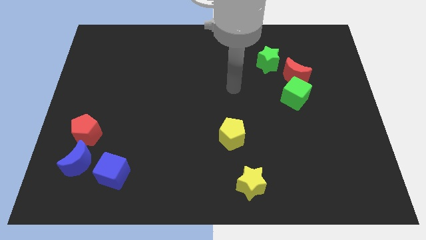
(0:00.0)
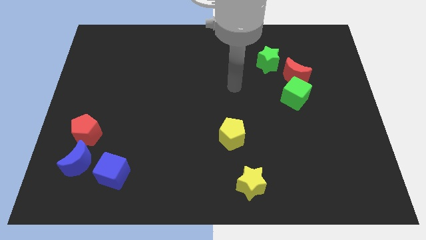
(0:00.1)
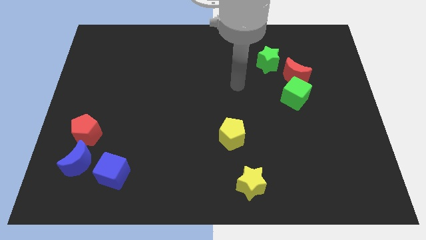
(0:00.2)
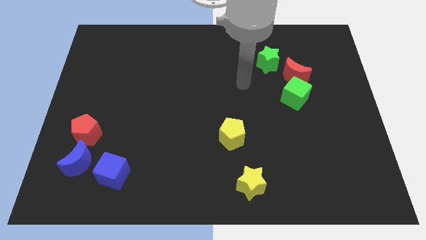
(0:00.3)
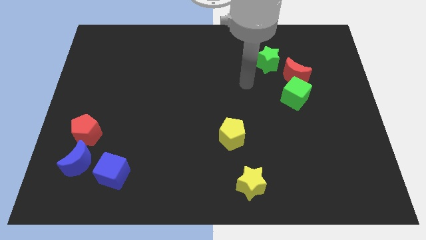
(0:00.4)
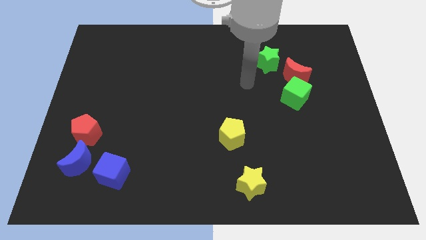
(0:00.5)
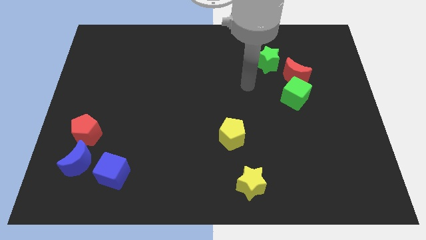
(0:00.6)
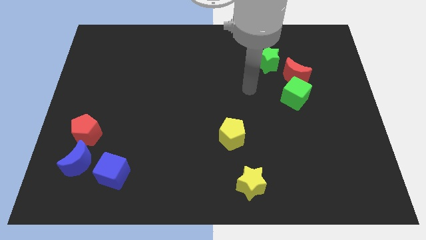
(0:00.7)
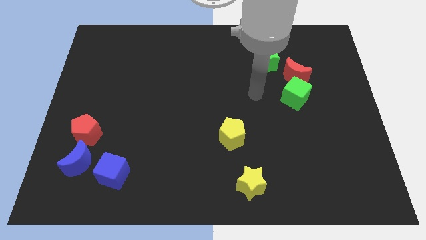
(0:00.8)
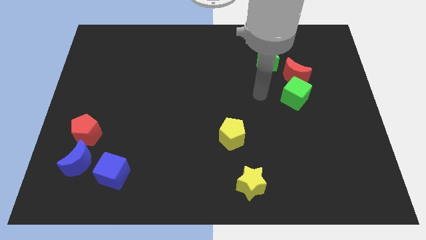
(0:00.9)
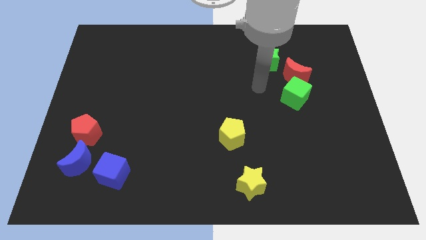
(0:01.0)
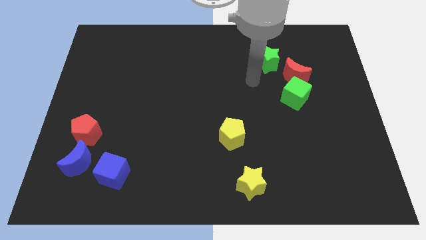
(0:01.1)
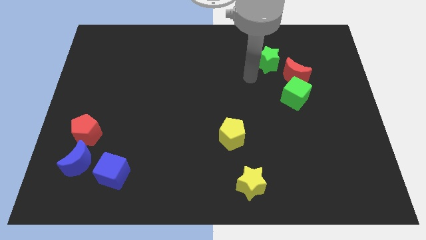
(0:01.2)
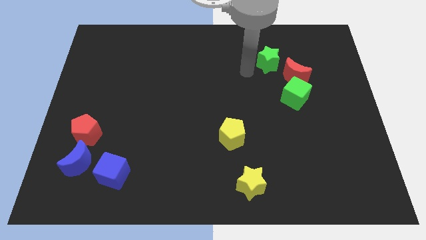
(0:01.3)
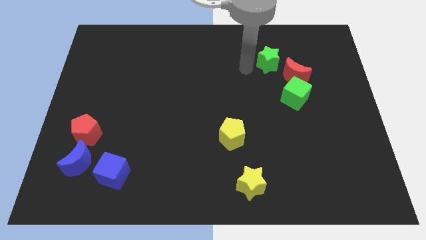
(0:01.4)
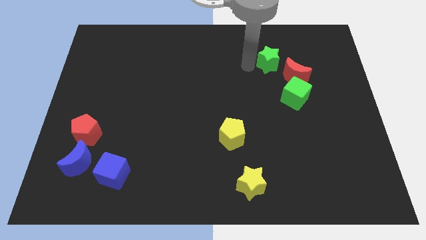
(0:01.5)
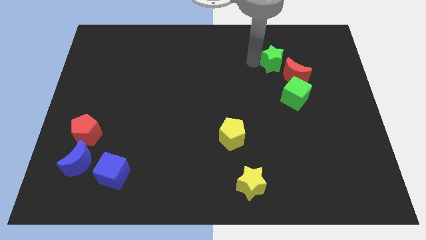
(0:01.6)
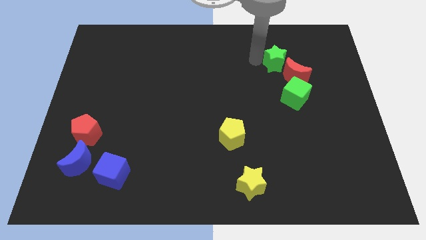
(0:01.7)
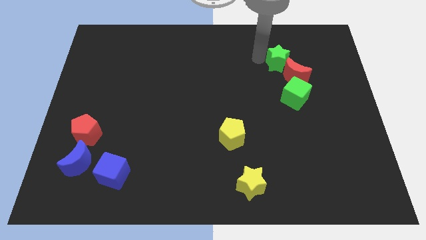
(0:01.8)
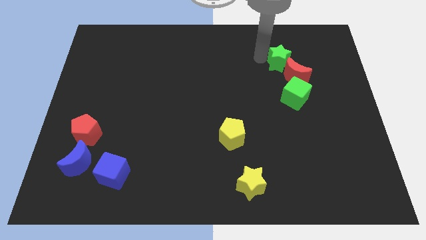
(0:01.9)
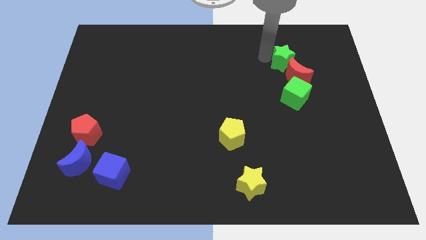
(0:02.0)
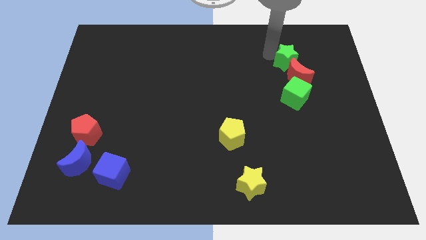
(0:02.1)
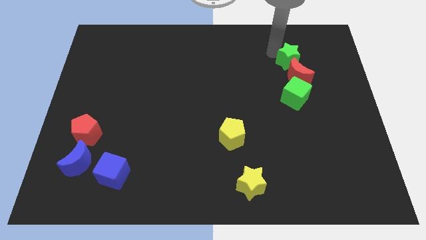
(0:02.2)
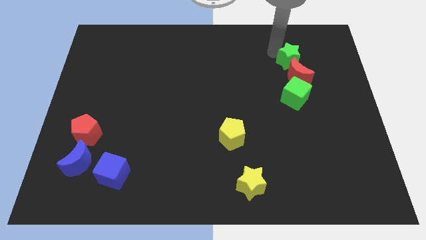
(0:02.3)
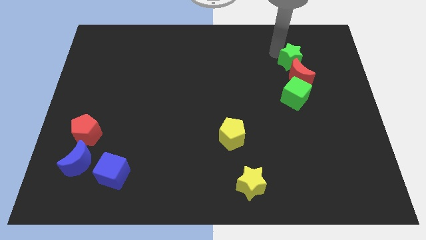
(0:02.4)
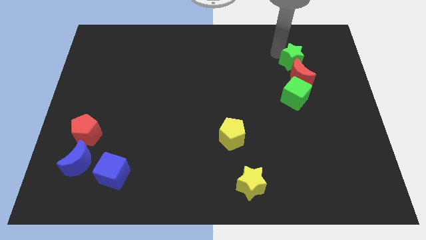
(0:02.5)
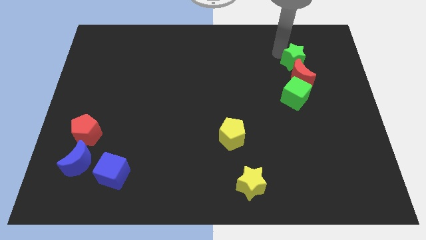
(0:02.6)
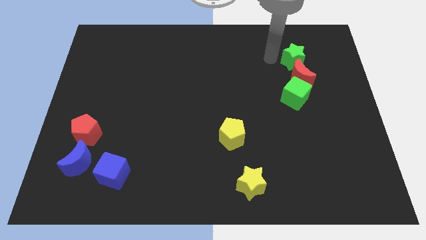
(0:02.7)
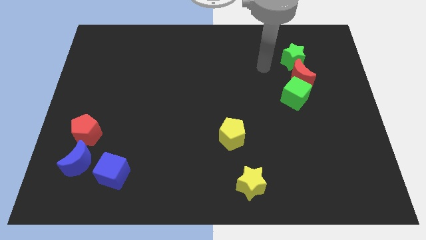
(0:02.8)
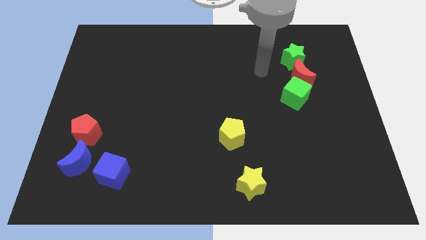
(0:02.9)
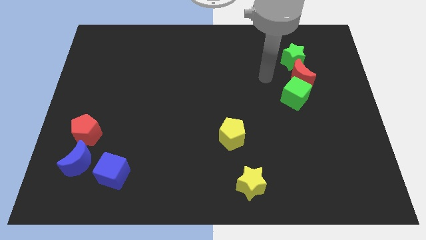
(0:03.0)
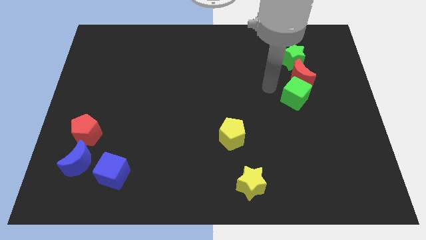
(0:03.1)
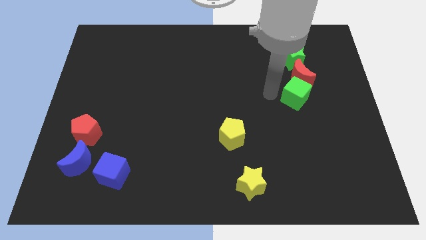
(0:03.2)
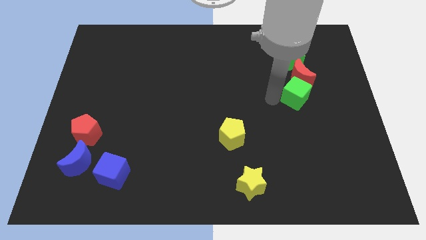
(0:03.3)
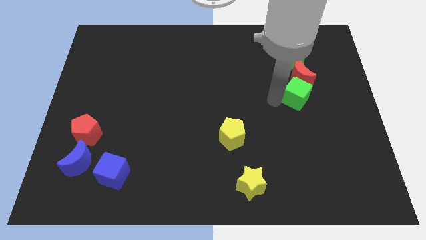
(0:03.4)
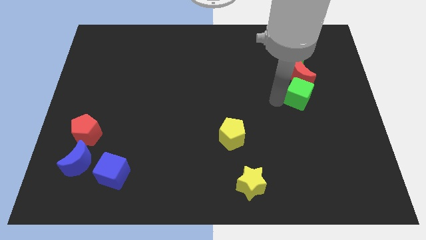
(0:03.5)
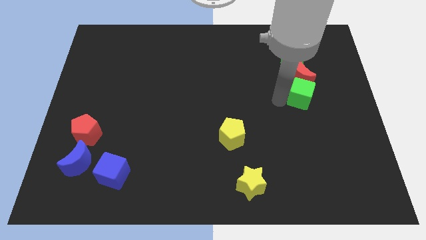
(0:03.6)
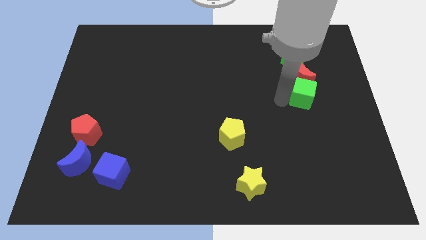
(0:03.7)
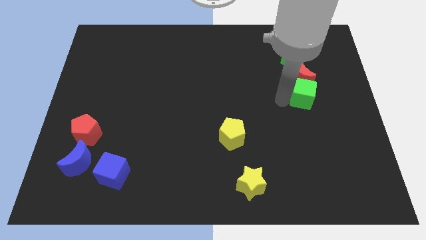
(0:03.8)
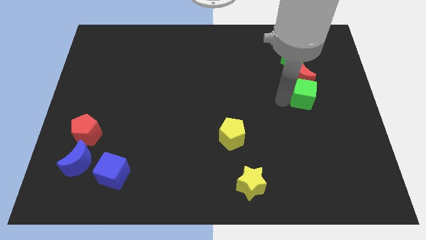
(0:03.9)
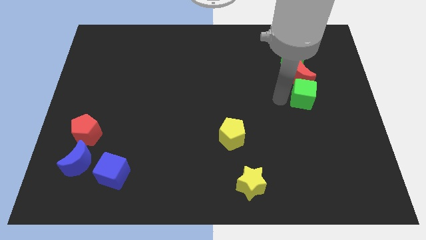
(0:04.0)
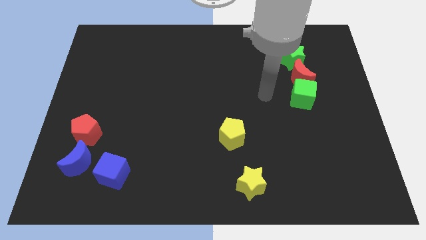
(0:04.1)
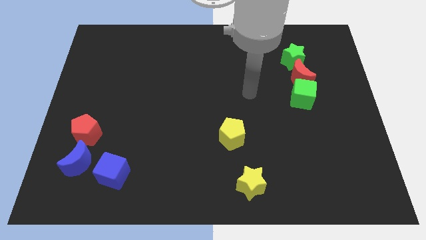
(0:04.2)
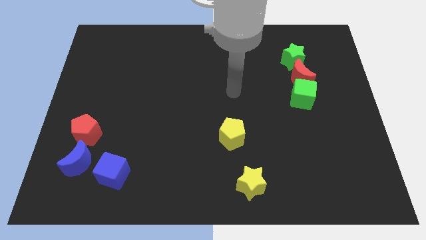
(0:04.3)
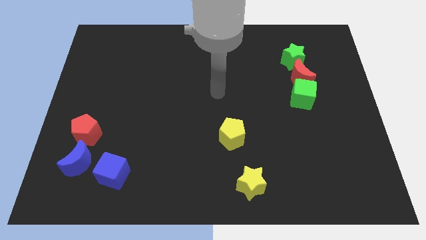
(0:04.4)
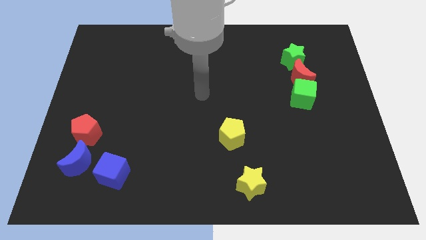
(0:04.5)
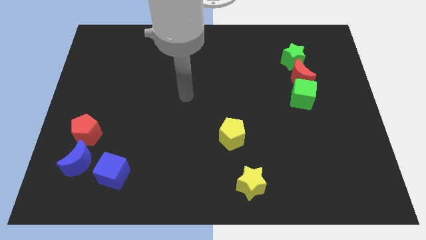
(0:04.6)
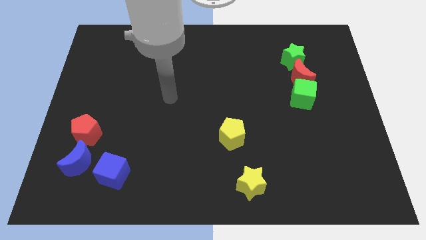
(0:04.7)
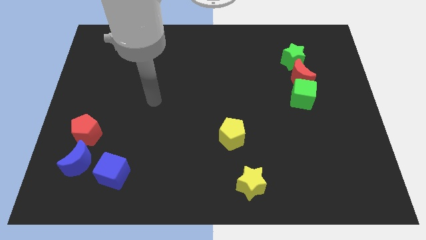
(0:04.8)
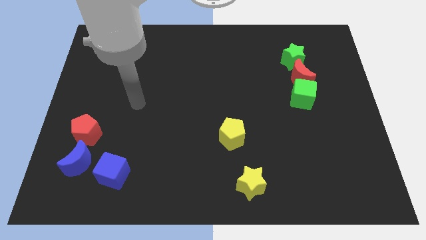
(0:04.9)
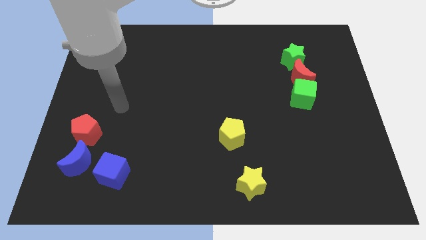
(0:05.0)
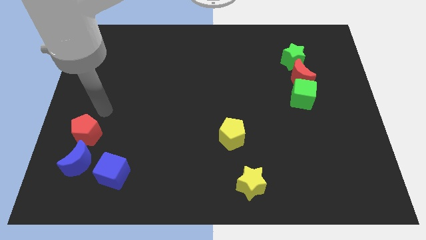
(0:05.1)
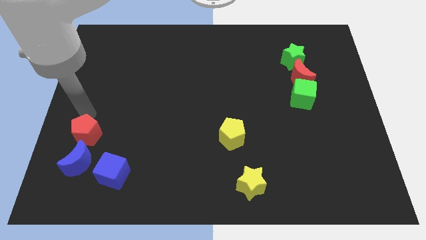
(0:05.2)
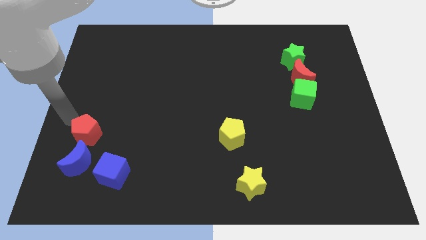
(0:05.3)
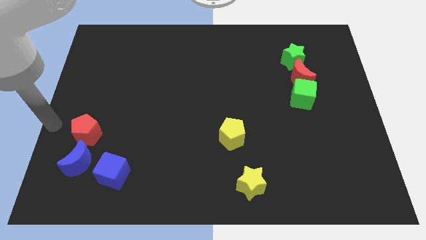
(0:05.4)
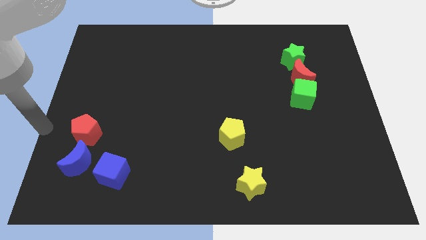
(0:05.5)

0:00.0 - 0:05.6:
place the green blocks and the red crescent in a vertical line

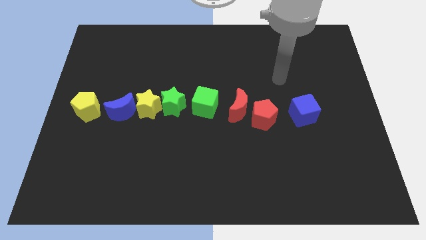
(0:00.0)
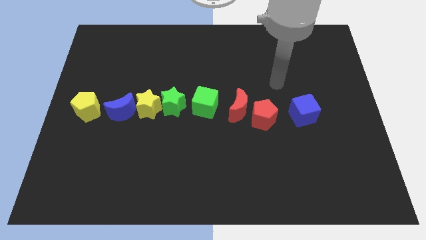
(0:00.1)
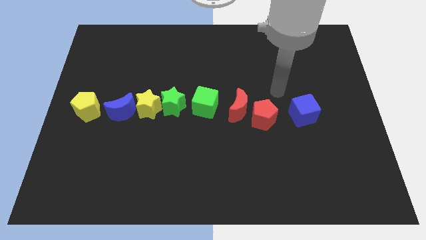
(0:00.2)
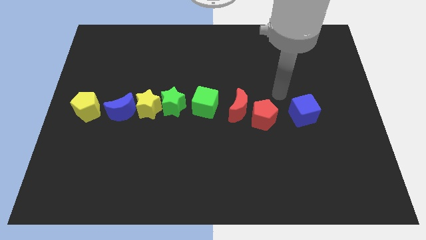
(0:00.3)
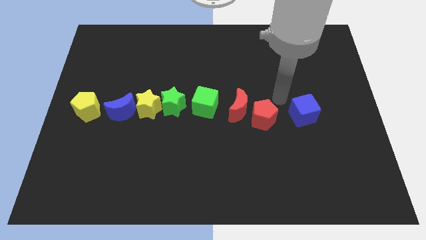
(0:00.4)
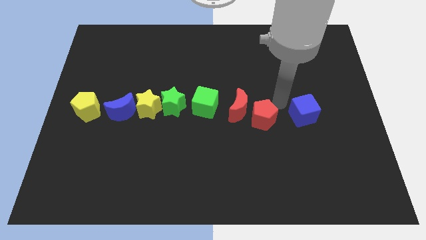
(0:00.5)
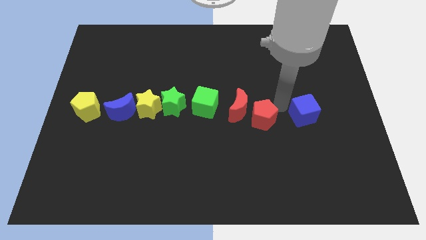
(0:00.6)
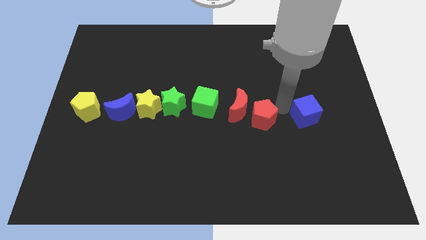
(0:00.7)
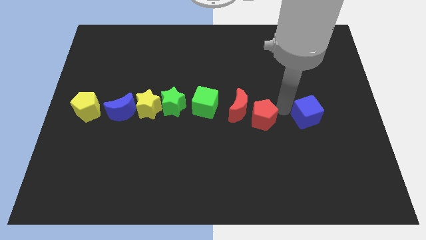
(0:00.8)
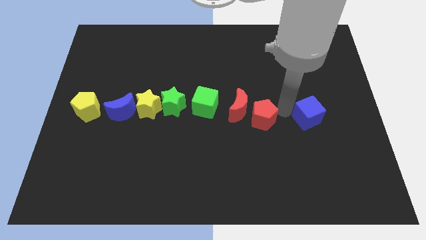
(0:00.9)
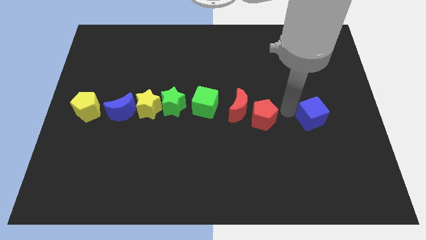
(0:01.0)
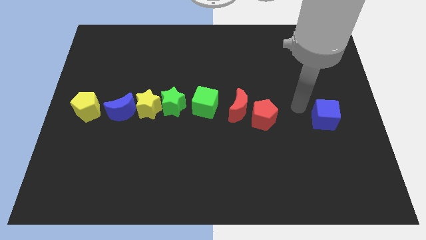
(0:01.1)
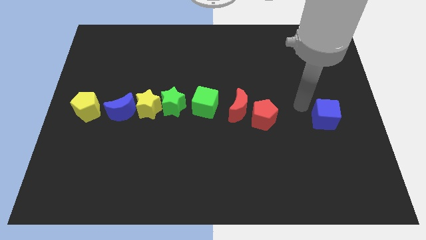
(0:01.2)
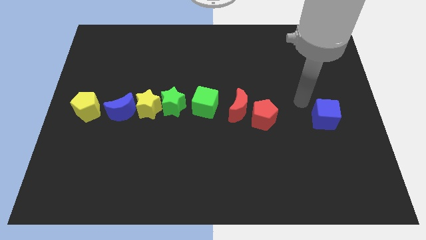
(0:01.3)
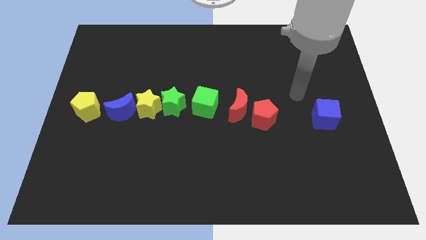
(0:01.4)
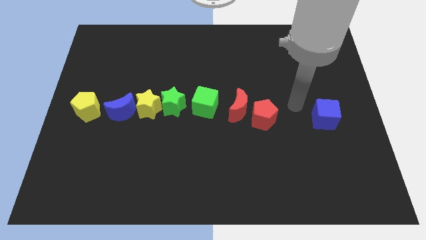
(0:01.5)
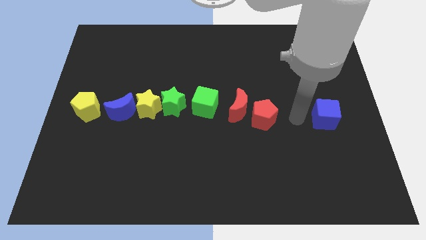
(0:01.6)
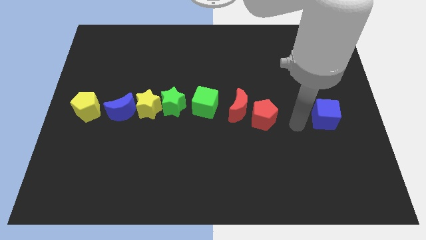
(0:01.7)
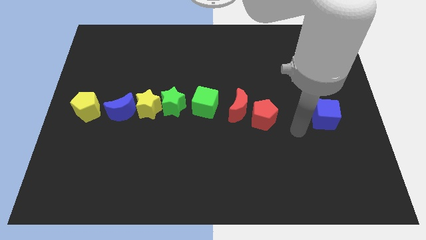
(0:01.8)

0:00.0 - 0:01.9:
push the blue cube towards the center right

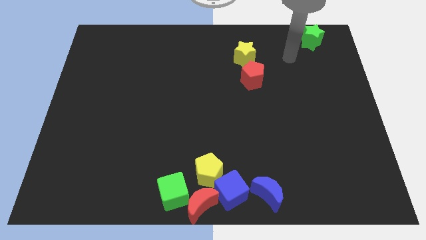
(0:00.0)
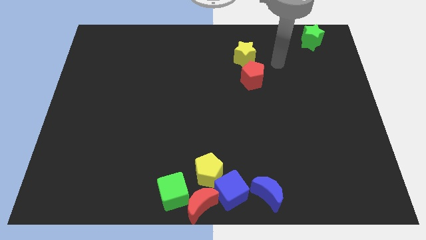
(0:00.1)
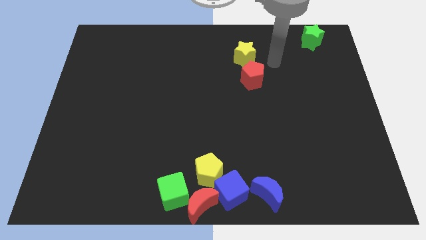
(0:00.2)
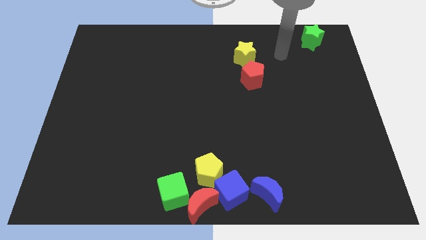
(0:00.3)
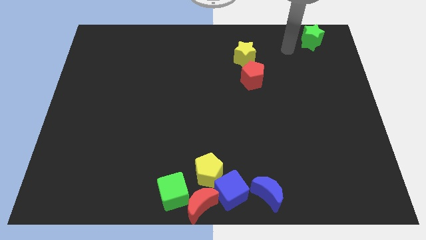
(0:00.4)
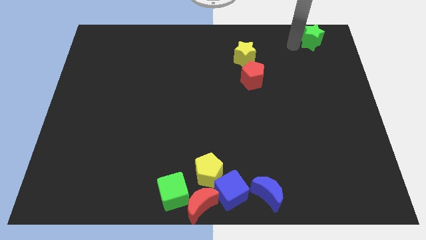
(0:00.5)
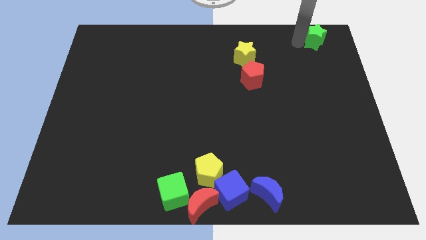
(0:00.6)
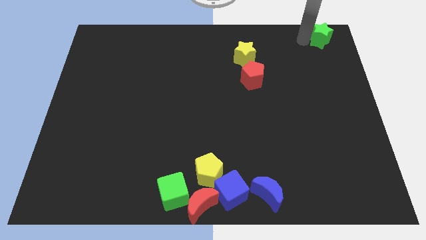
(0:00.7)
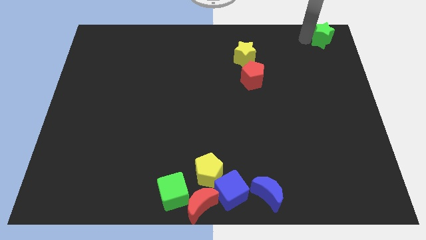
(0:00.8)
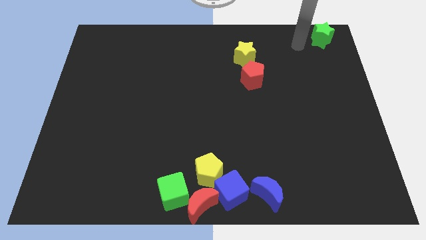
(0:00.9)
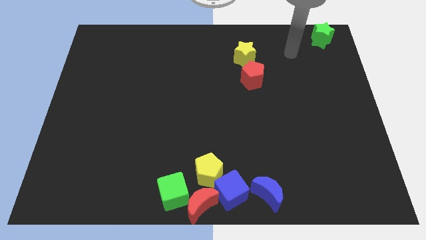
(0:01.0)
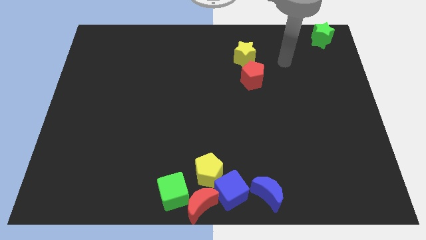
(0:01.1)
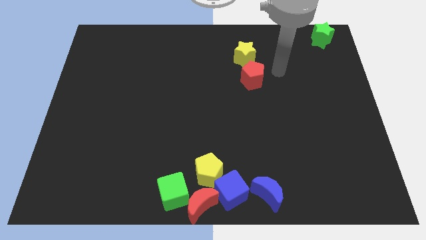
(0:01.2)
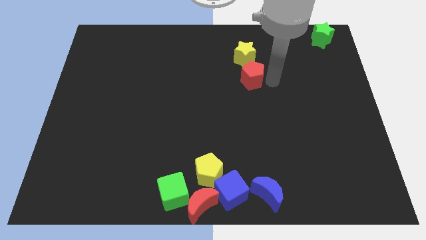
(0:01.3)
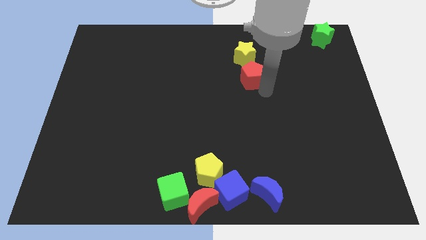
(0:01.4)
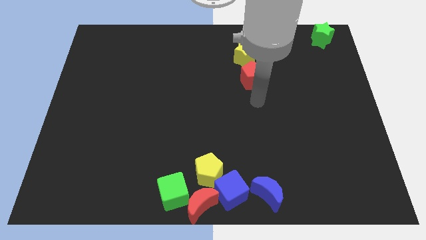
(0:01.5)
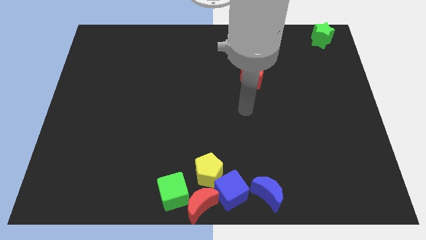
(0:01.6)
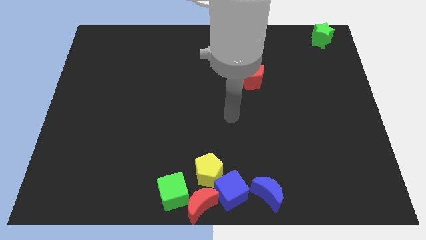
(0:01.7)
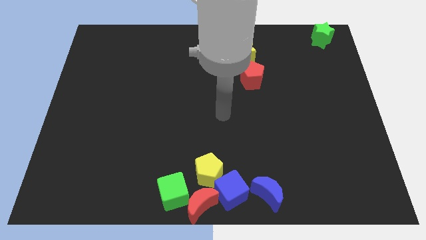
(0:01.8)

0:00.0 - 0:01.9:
place the green star in the top right corner of the board
